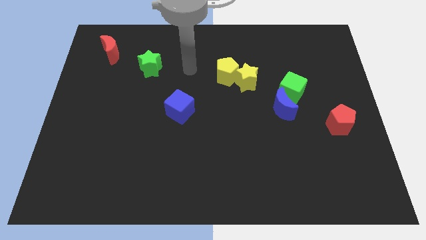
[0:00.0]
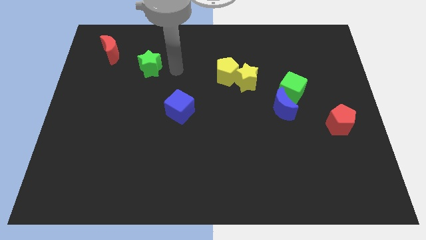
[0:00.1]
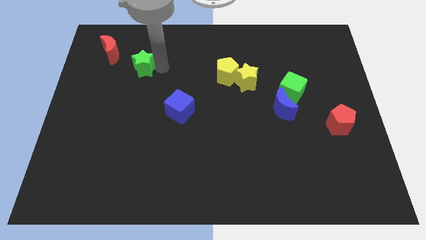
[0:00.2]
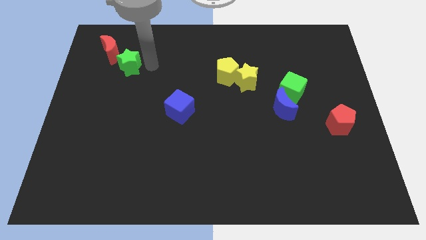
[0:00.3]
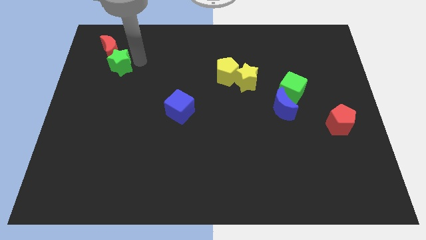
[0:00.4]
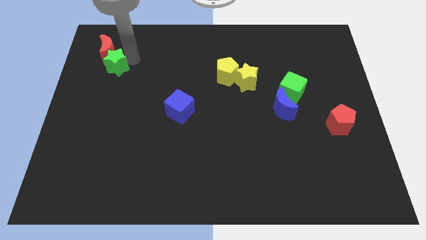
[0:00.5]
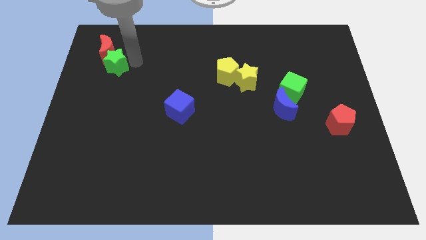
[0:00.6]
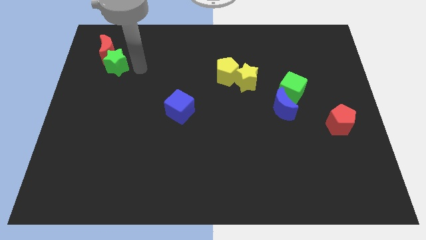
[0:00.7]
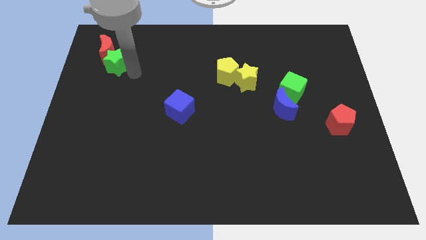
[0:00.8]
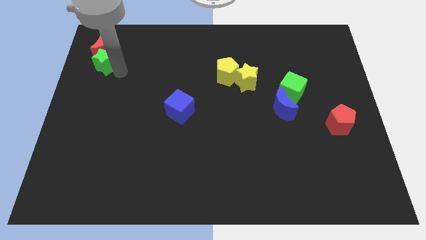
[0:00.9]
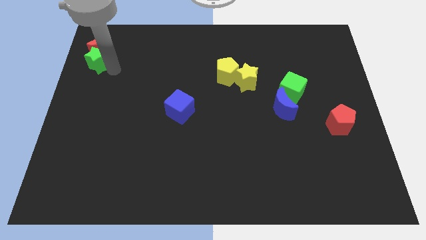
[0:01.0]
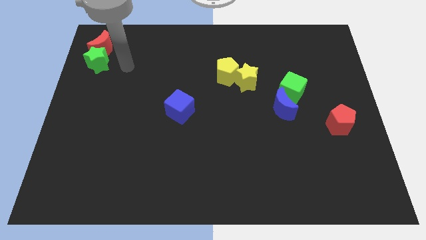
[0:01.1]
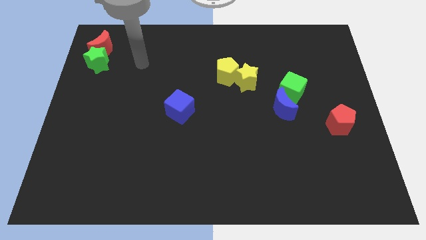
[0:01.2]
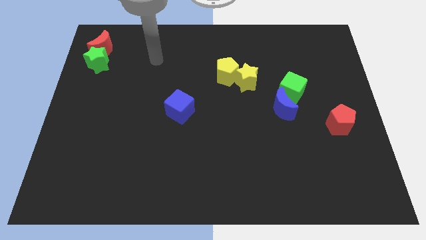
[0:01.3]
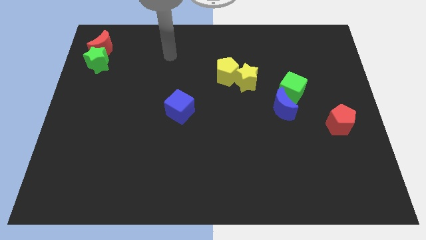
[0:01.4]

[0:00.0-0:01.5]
push the green star into the red moon

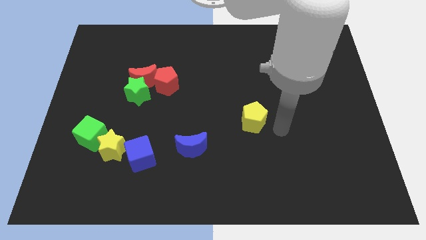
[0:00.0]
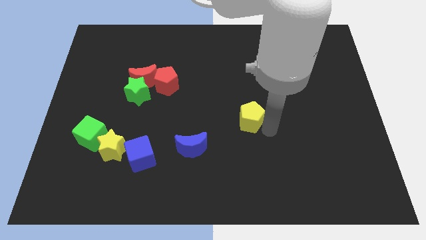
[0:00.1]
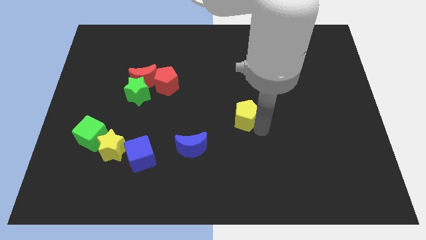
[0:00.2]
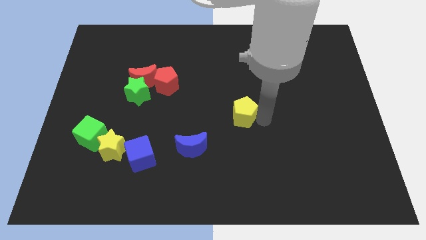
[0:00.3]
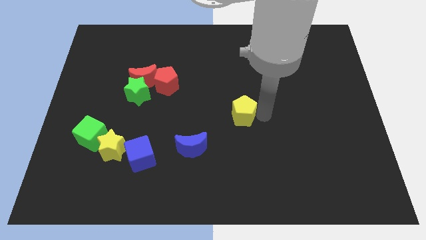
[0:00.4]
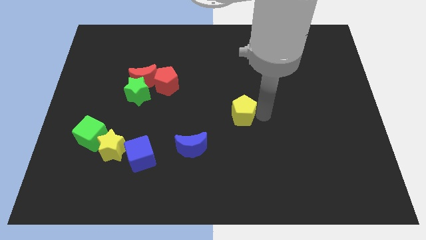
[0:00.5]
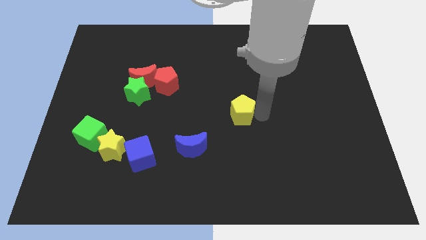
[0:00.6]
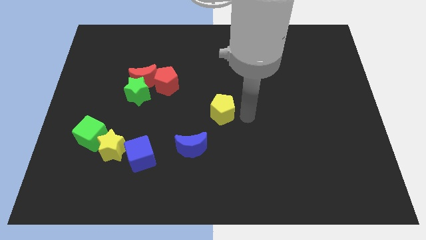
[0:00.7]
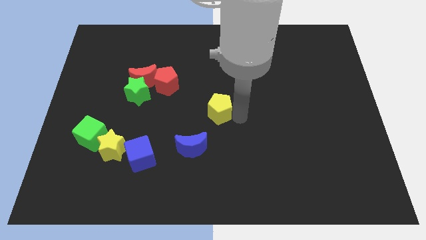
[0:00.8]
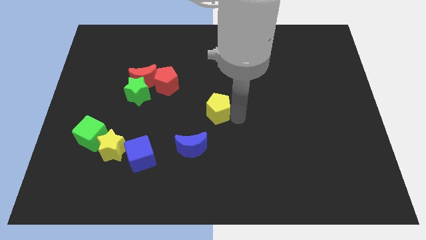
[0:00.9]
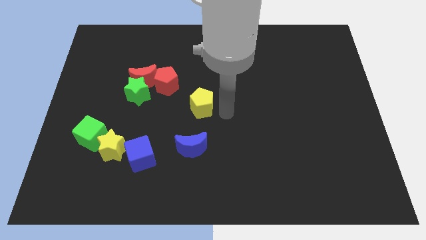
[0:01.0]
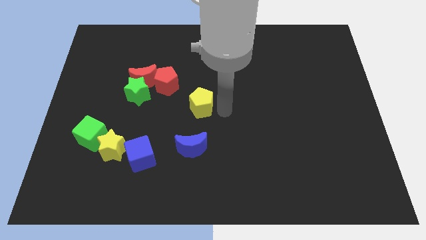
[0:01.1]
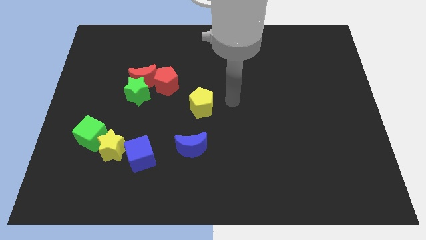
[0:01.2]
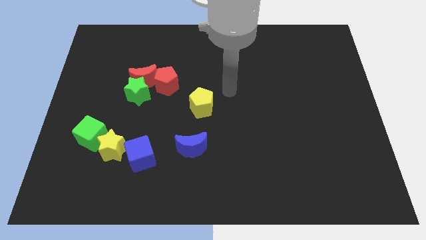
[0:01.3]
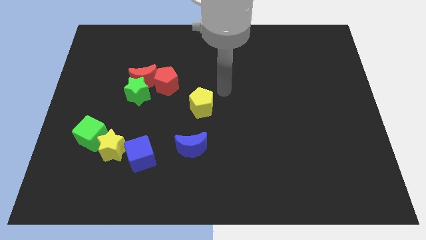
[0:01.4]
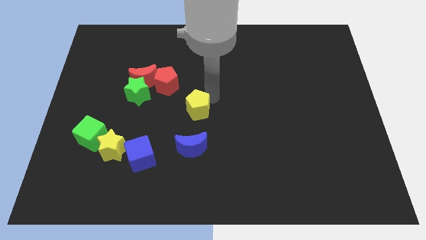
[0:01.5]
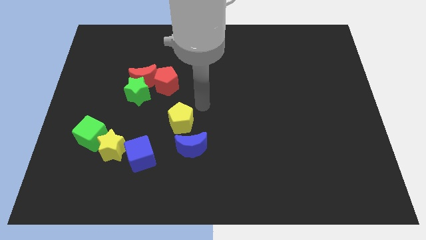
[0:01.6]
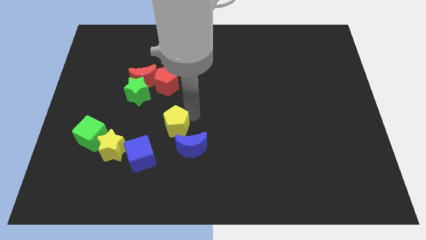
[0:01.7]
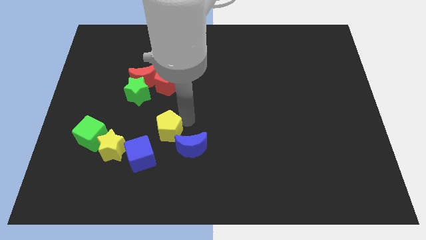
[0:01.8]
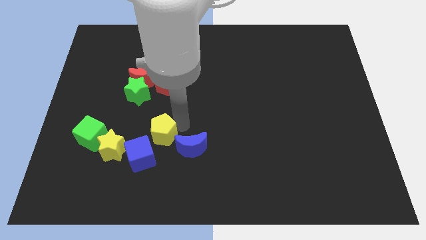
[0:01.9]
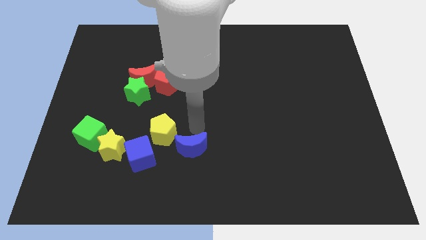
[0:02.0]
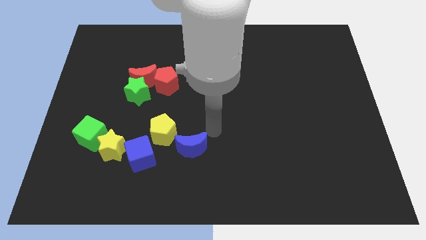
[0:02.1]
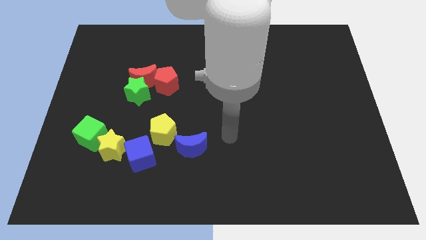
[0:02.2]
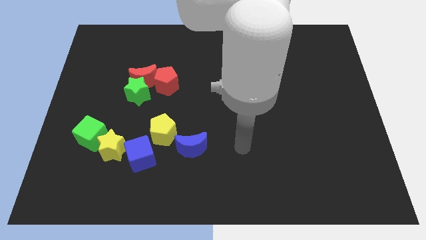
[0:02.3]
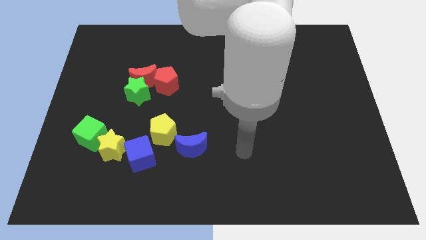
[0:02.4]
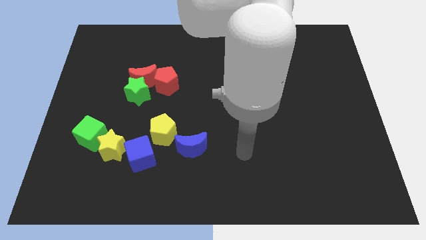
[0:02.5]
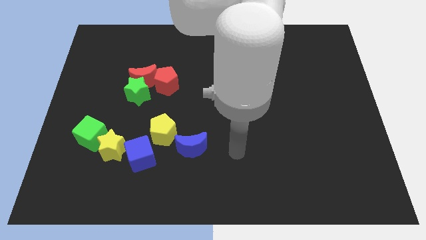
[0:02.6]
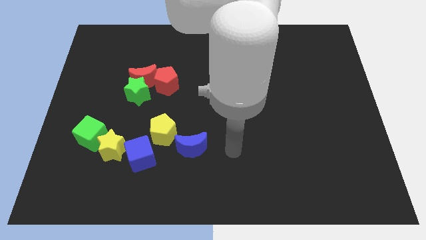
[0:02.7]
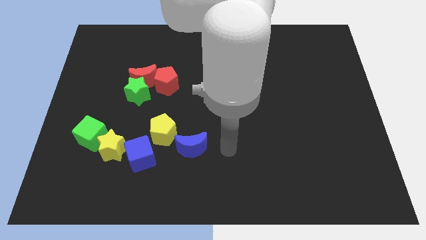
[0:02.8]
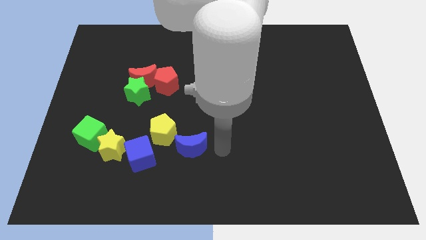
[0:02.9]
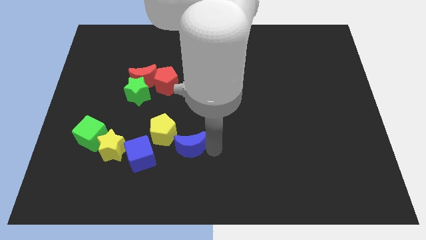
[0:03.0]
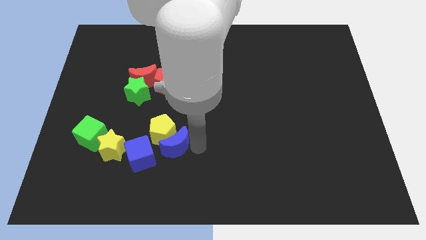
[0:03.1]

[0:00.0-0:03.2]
slide the yellow pentagon diagonally top left to the blue moon

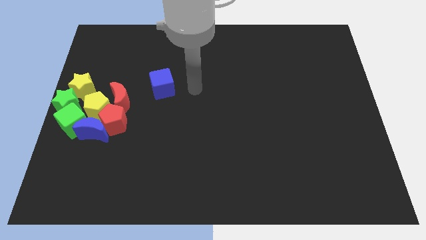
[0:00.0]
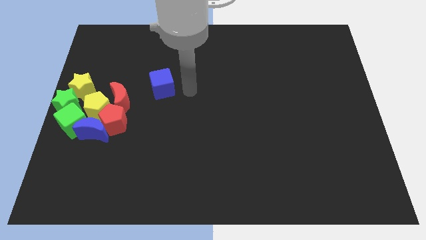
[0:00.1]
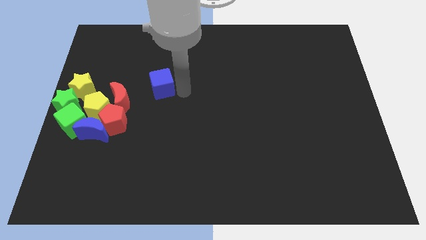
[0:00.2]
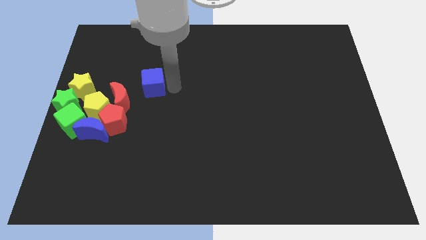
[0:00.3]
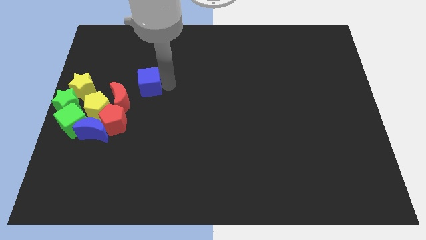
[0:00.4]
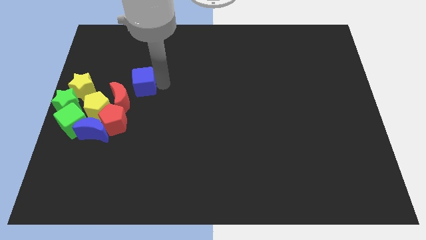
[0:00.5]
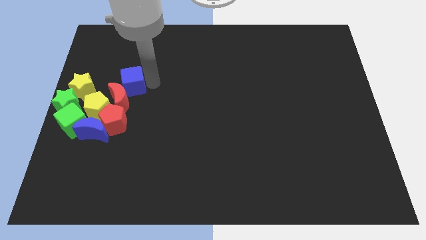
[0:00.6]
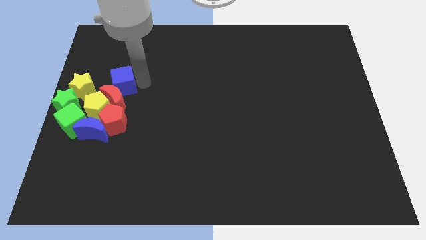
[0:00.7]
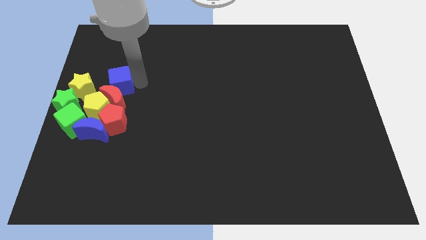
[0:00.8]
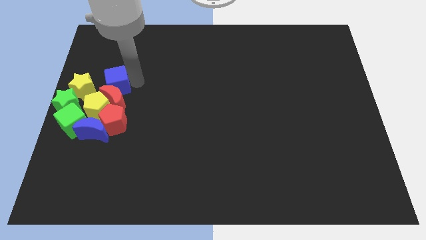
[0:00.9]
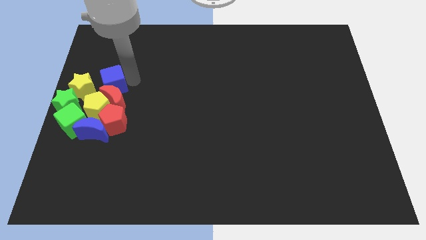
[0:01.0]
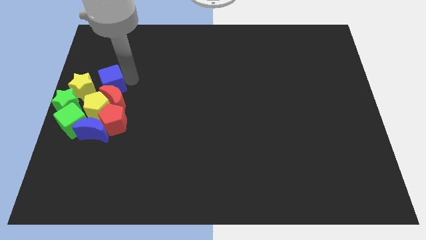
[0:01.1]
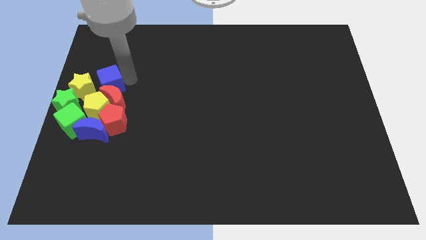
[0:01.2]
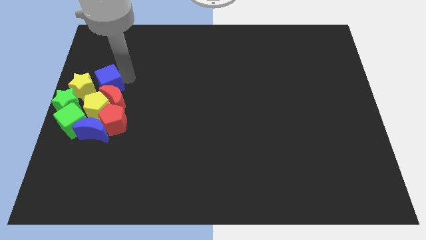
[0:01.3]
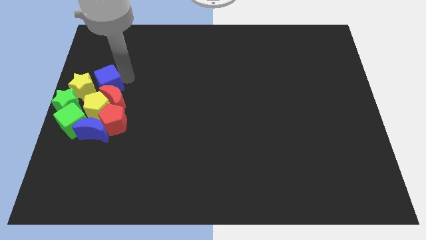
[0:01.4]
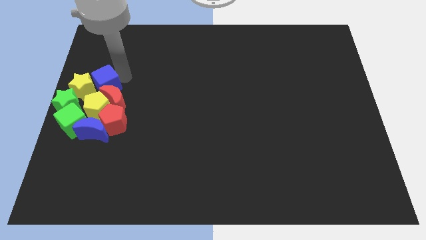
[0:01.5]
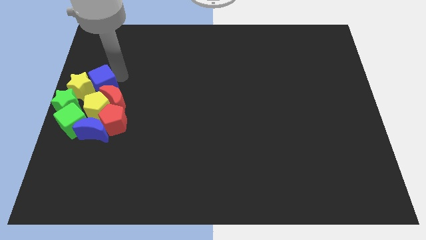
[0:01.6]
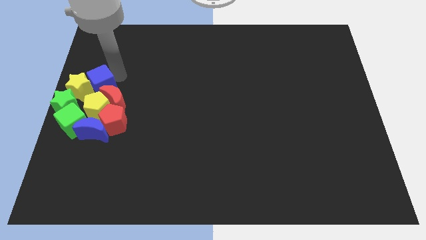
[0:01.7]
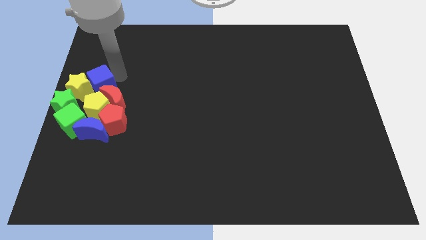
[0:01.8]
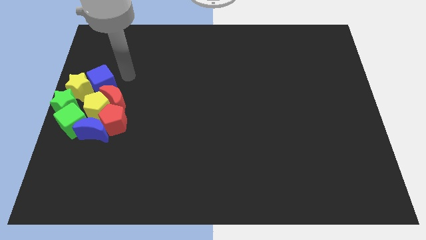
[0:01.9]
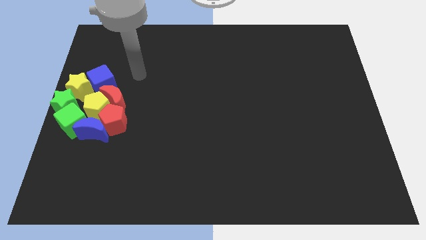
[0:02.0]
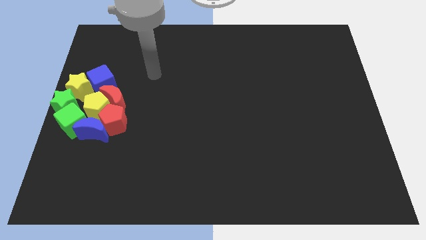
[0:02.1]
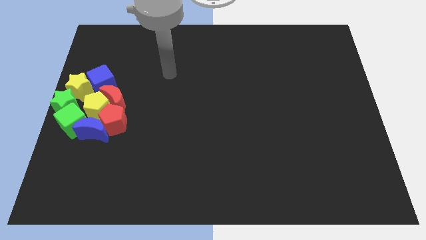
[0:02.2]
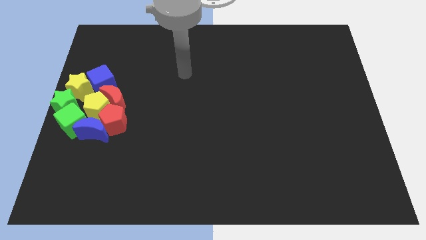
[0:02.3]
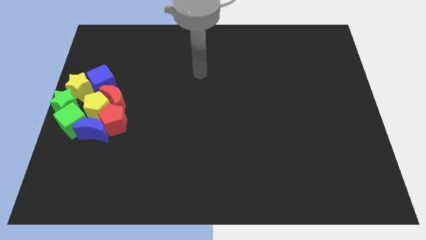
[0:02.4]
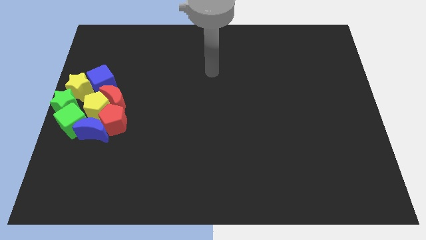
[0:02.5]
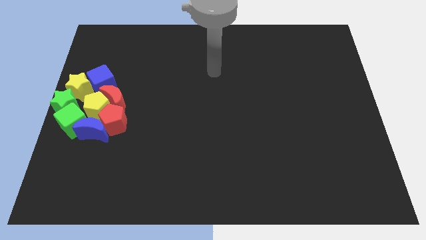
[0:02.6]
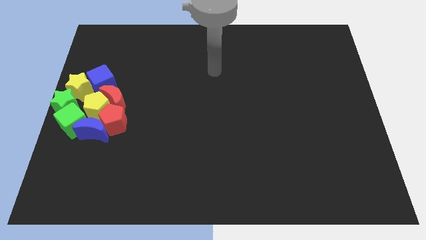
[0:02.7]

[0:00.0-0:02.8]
move the blue cube into the yellow star

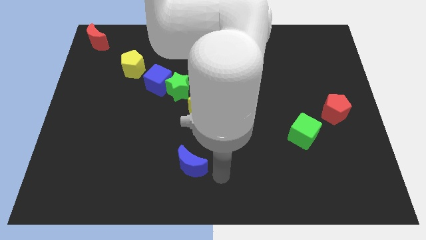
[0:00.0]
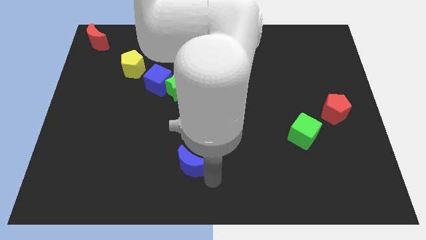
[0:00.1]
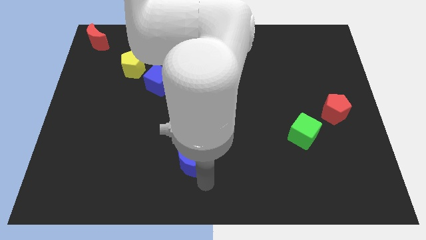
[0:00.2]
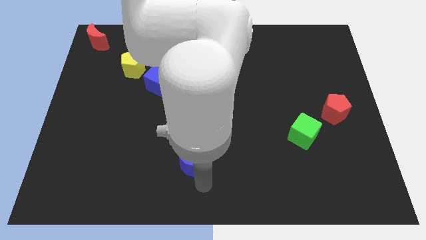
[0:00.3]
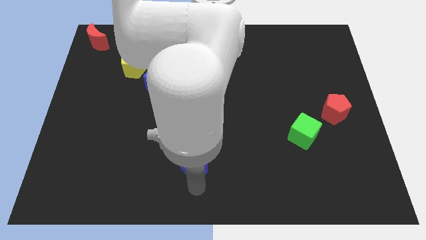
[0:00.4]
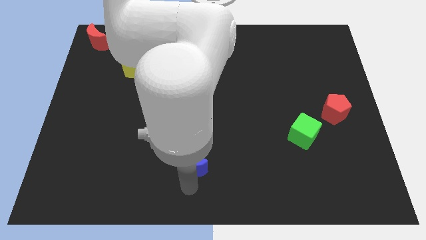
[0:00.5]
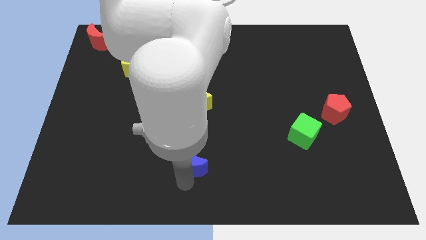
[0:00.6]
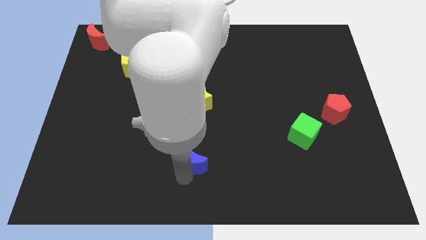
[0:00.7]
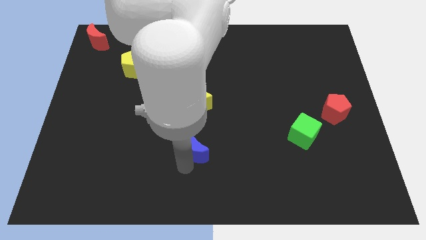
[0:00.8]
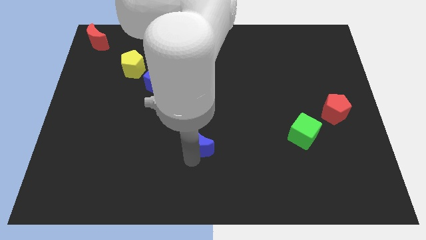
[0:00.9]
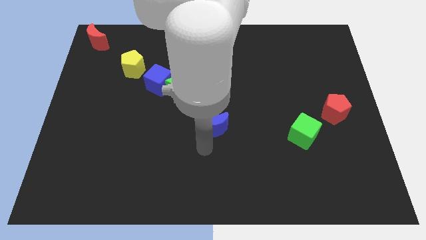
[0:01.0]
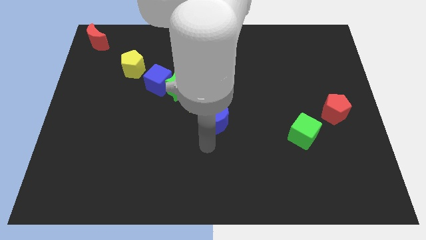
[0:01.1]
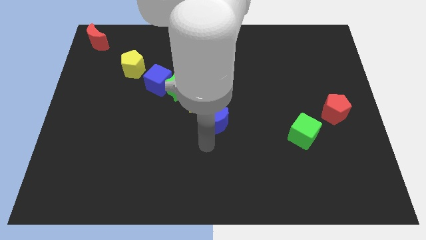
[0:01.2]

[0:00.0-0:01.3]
move the blue moon diagonally below the yellow star

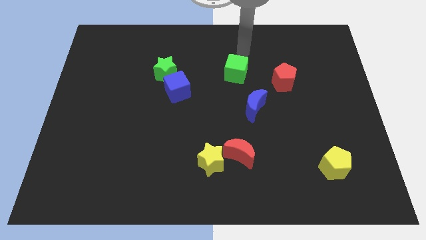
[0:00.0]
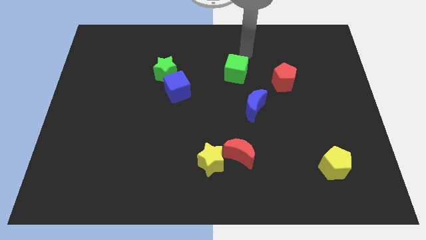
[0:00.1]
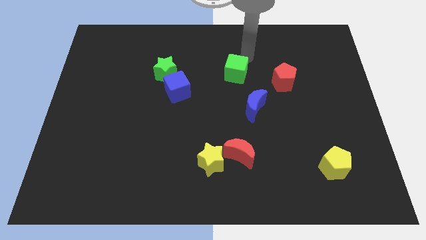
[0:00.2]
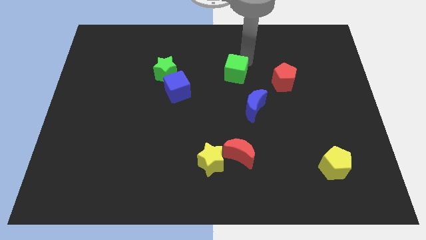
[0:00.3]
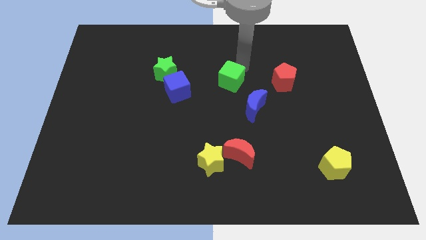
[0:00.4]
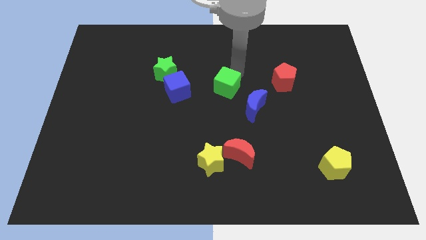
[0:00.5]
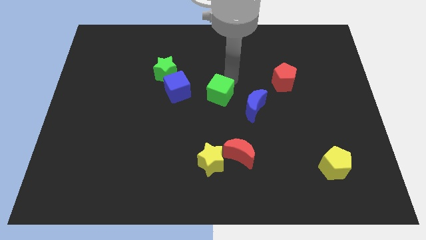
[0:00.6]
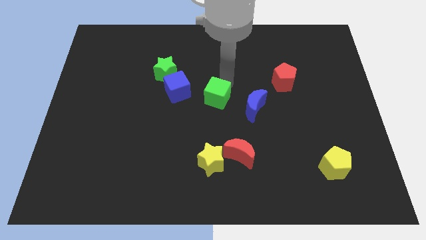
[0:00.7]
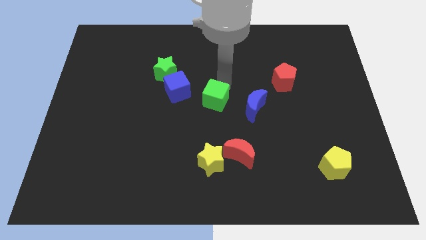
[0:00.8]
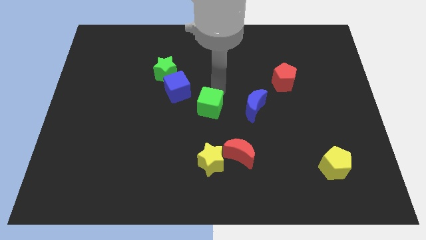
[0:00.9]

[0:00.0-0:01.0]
push green cube slightly downwards
